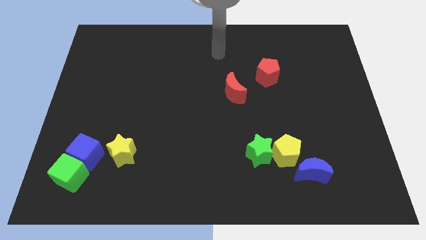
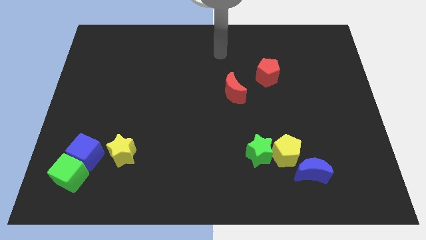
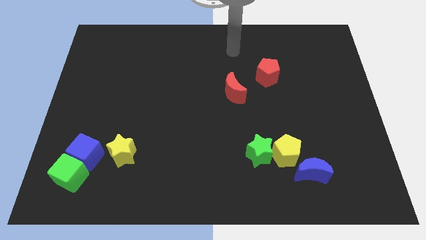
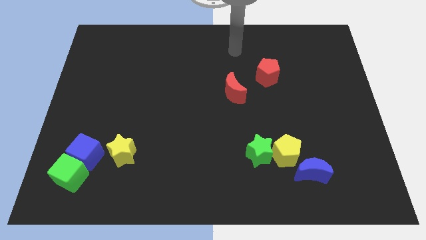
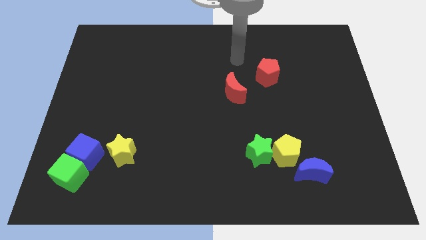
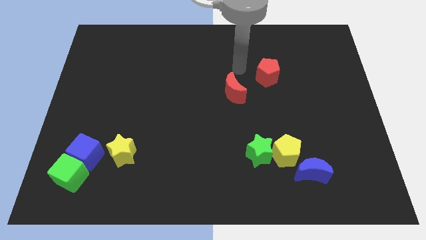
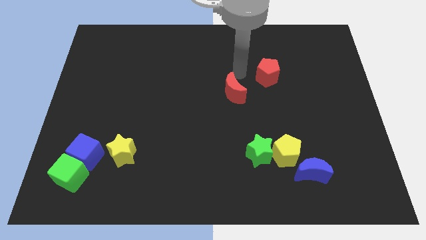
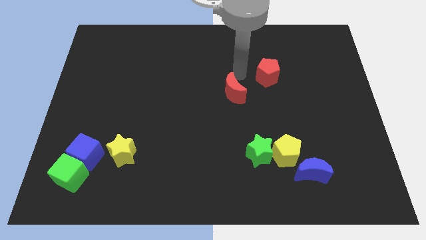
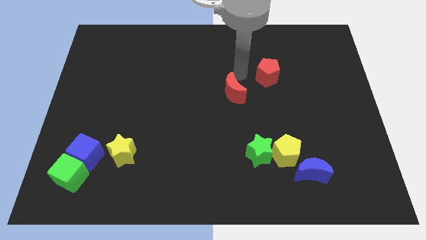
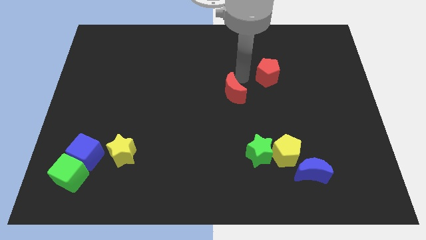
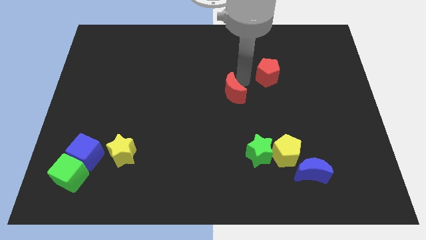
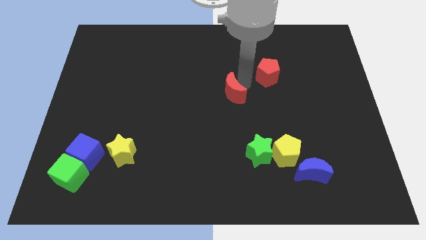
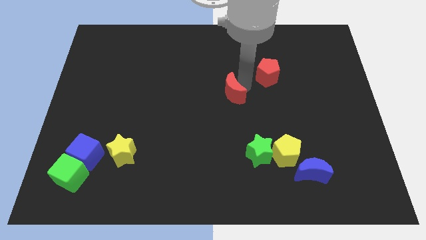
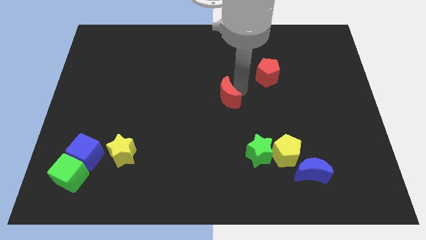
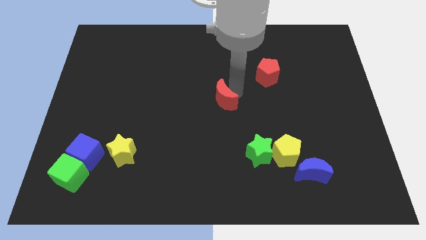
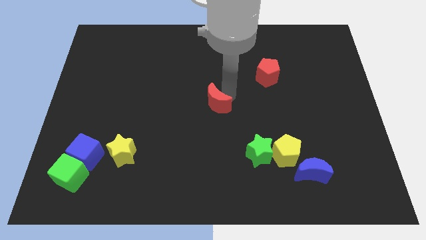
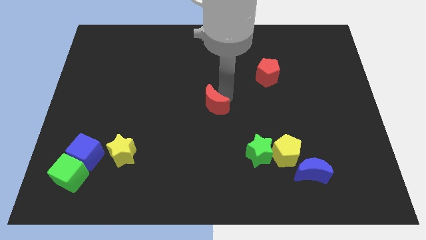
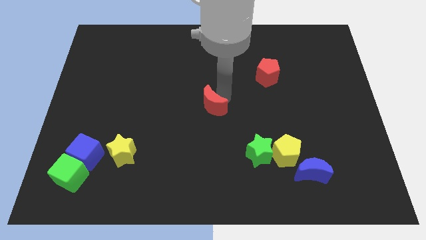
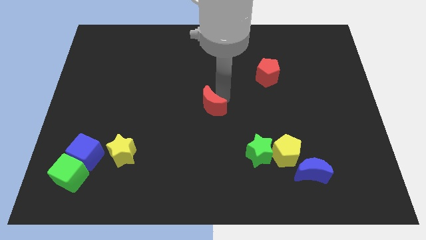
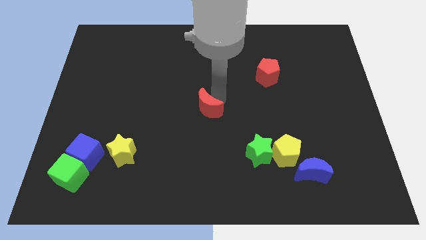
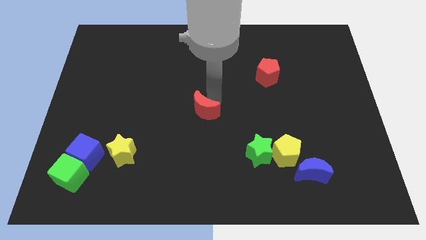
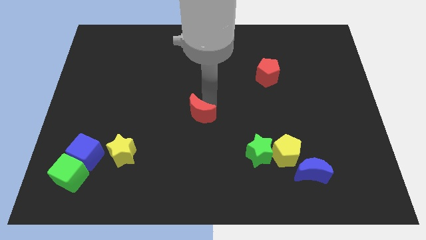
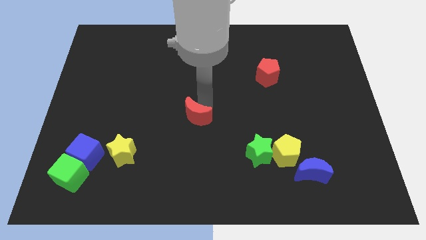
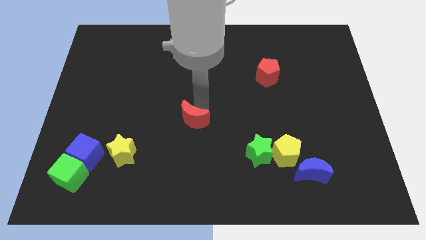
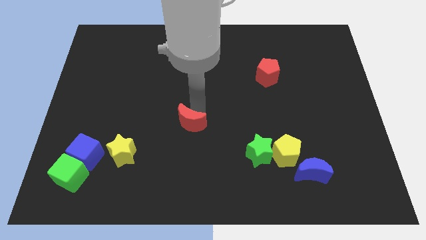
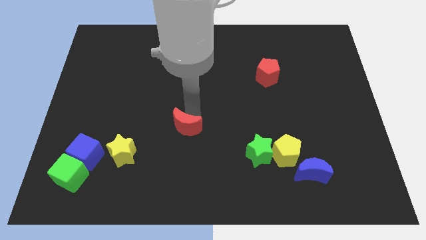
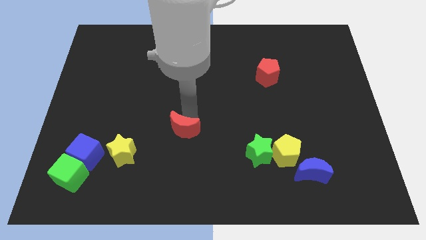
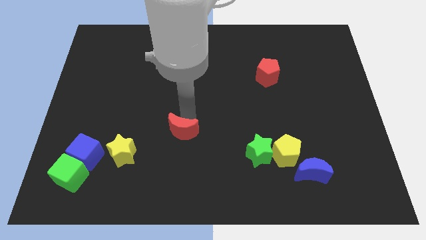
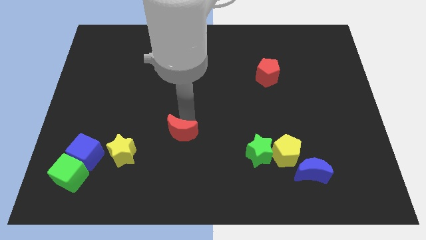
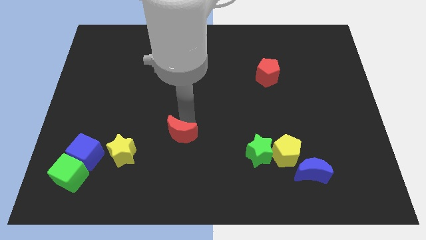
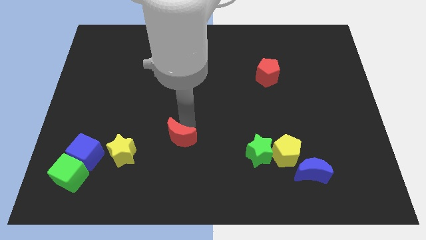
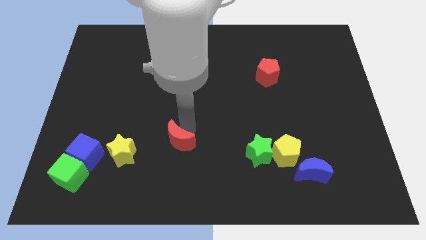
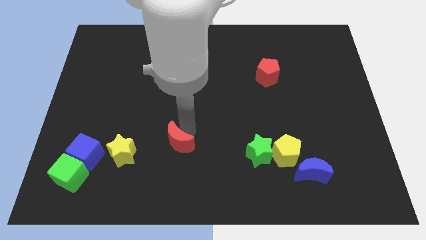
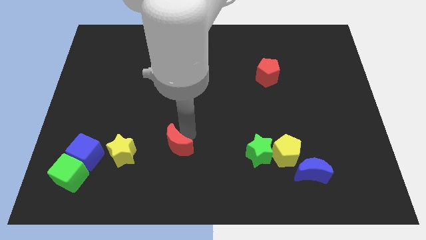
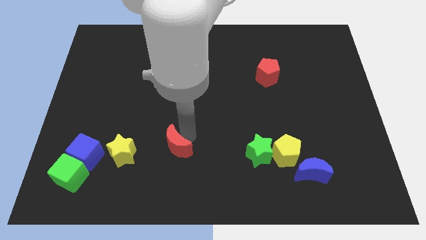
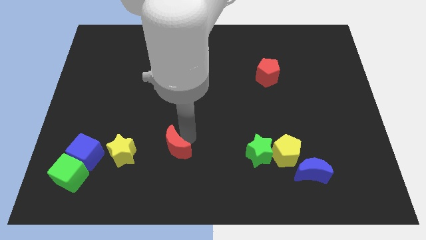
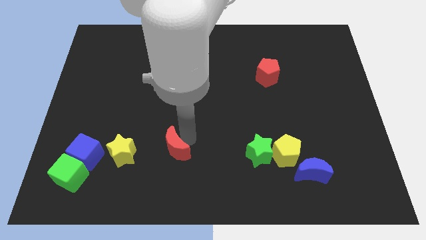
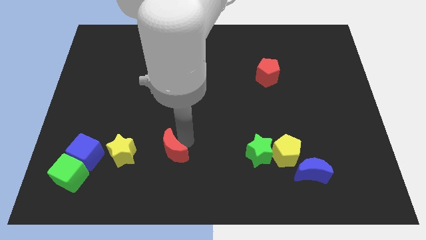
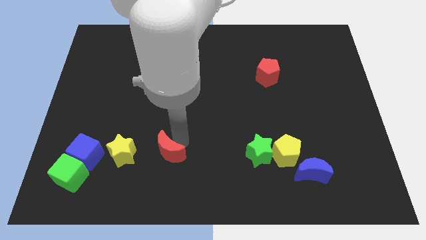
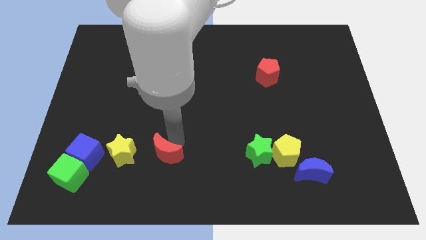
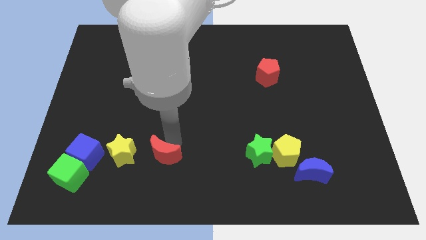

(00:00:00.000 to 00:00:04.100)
push the red crescent to the right of the yellow star

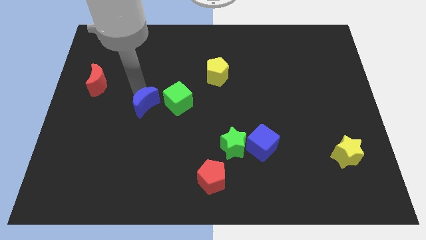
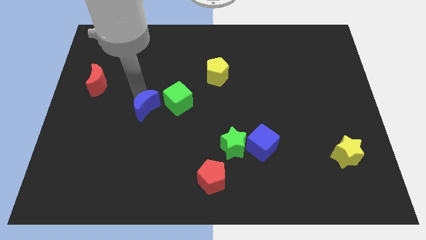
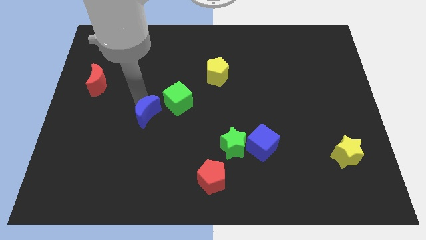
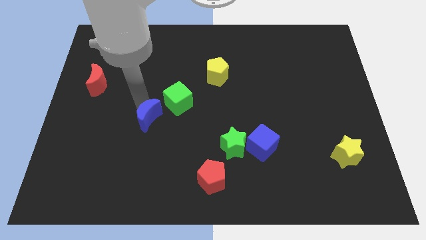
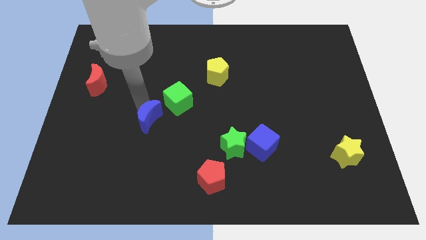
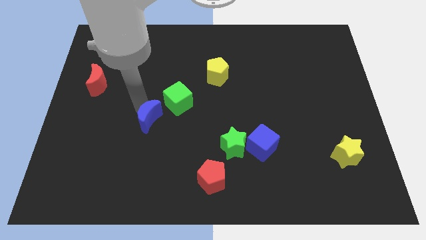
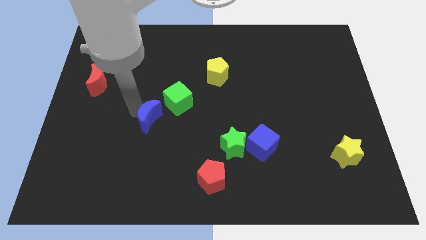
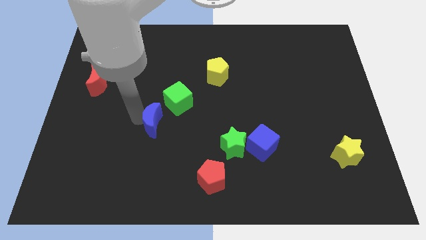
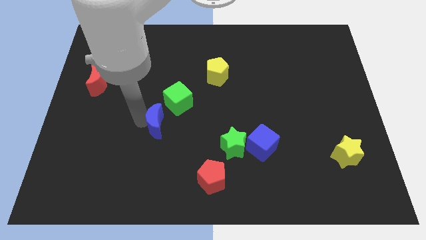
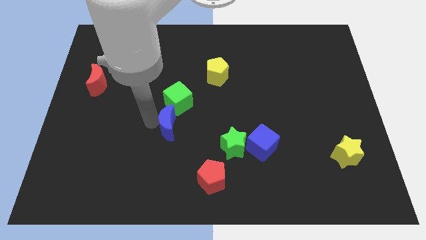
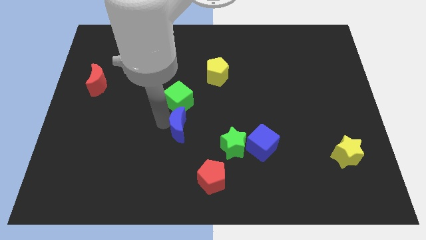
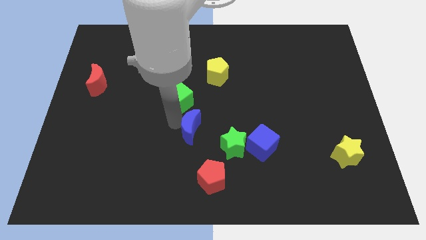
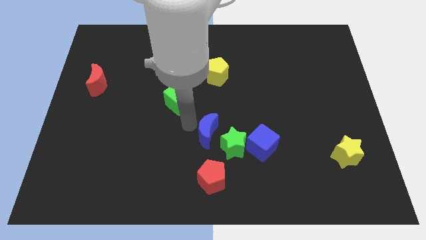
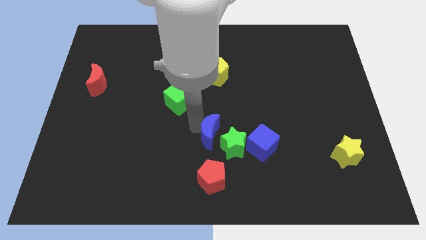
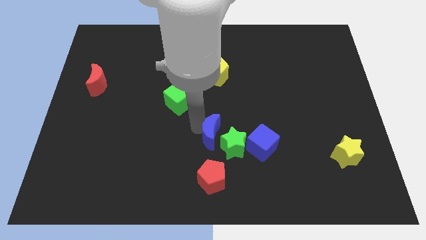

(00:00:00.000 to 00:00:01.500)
push the blue crescent near the green star

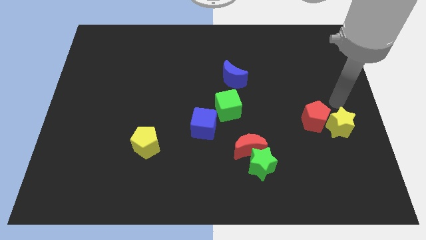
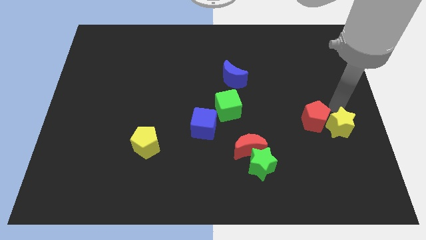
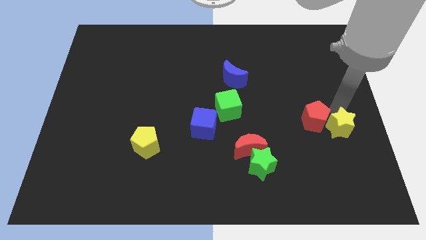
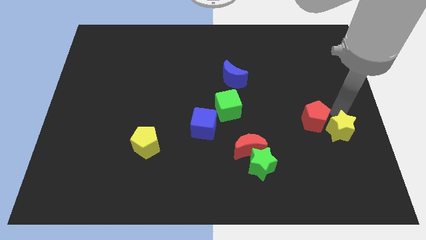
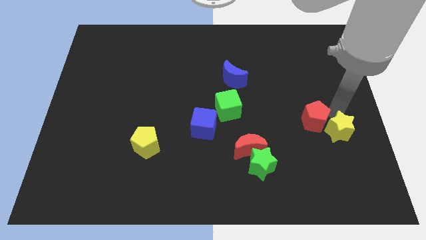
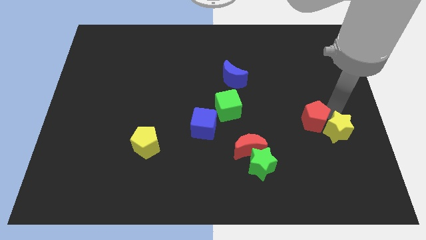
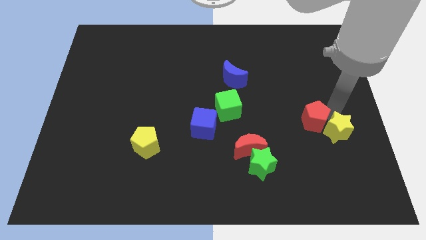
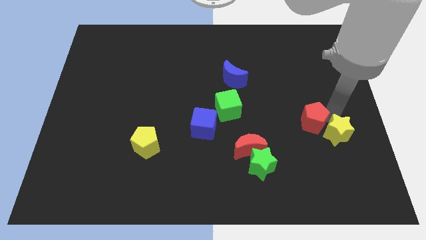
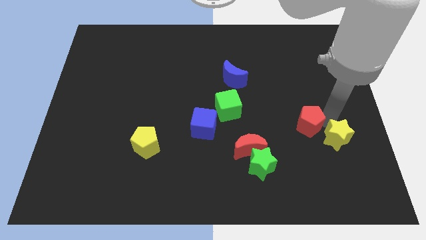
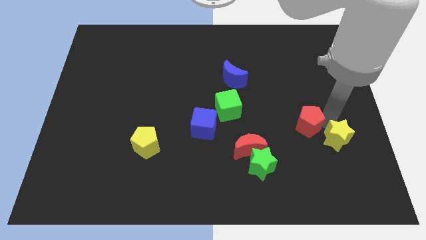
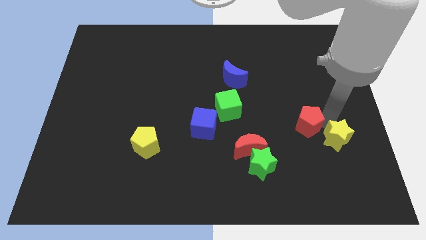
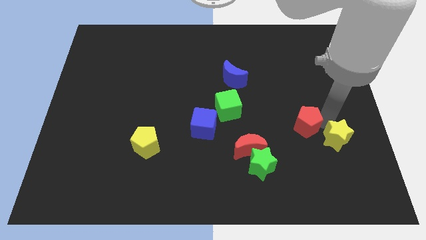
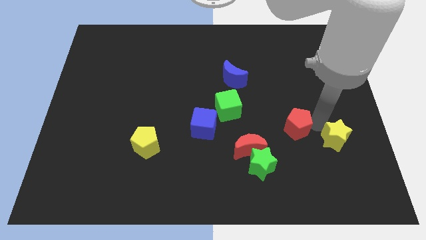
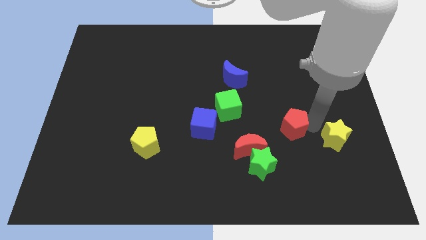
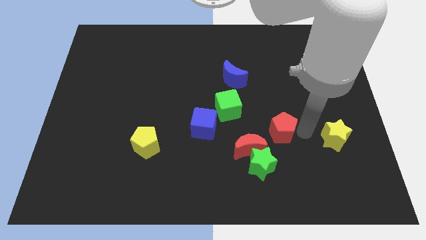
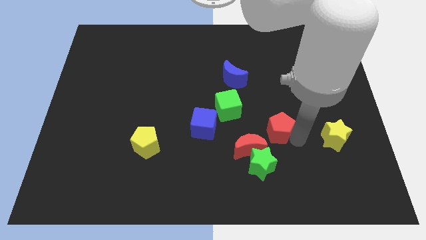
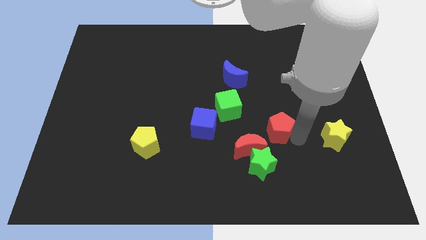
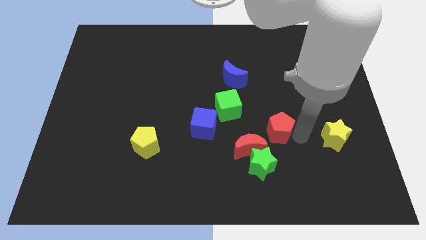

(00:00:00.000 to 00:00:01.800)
separate the red pentagon and yellow star

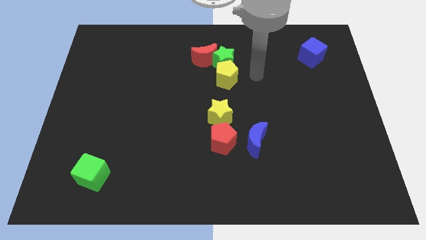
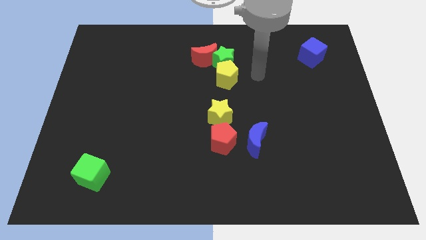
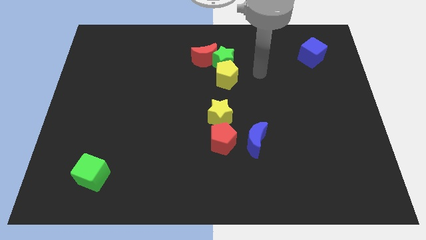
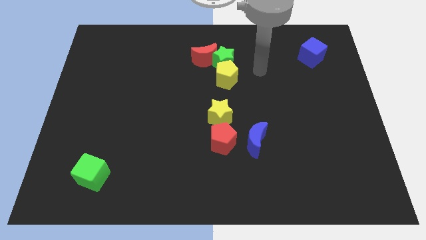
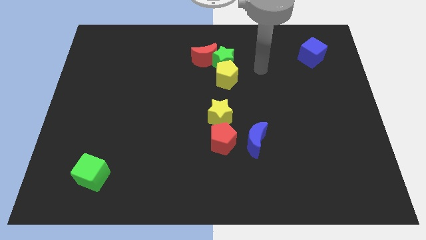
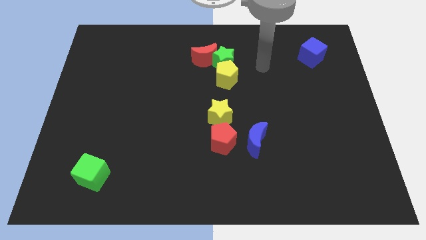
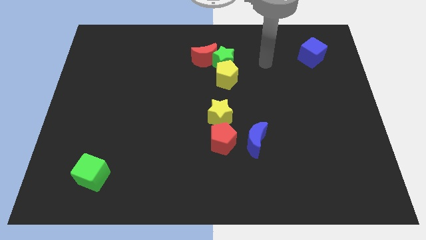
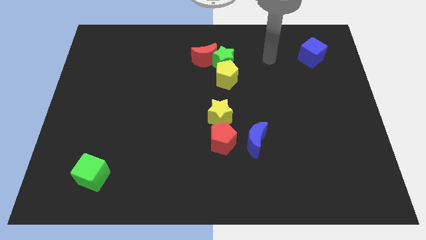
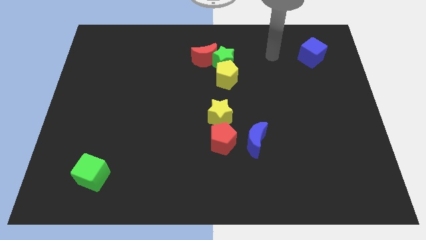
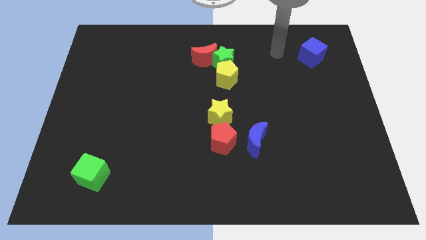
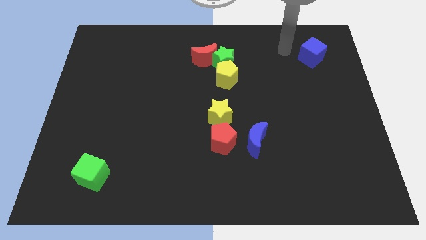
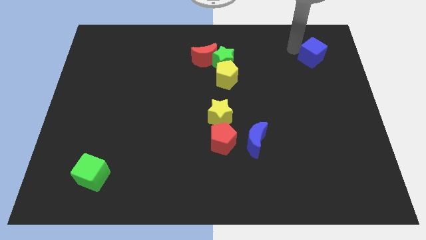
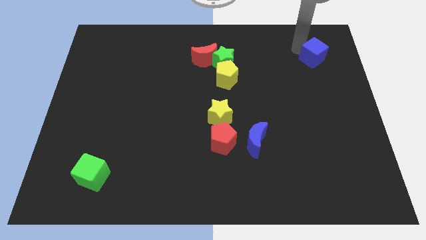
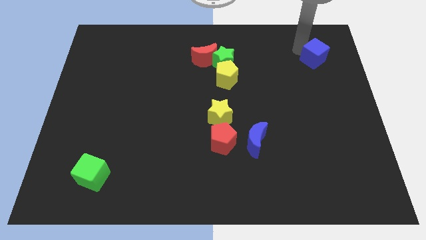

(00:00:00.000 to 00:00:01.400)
touch the top side of the blue cube

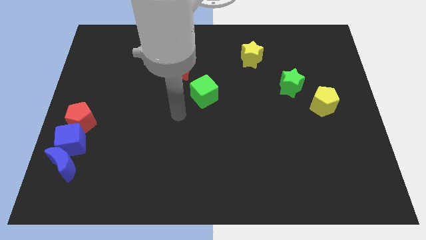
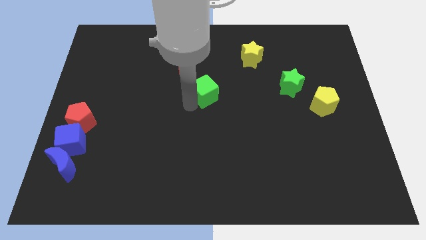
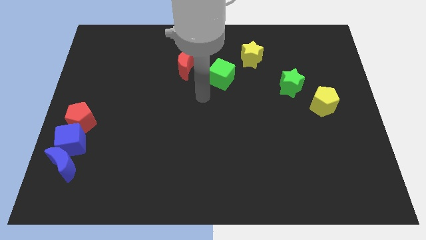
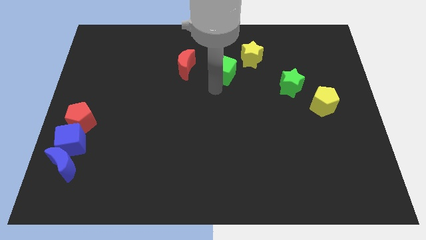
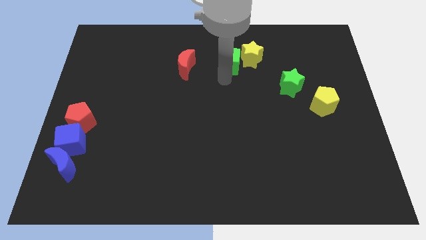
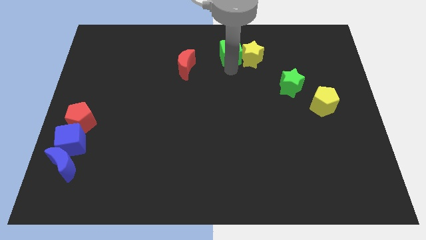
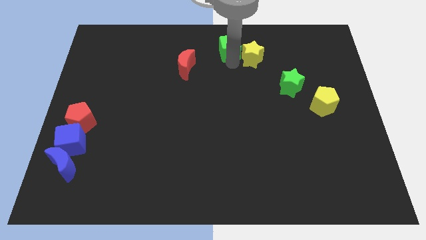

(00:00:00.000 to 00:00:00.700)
move the green cube to the left of the yellow star
